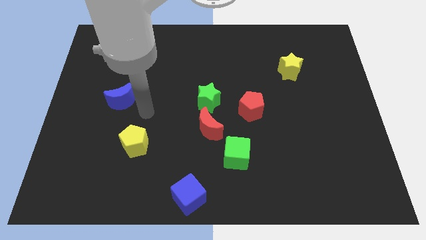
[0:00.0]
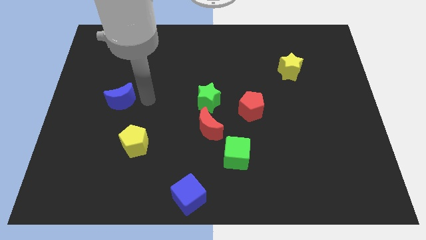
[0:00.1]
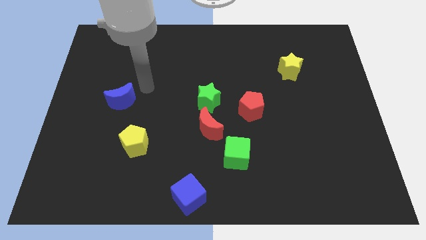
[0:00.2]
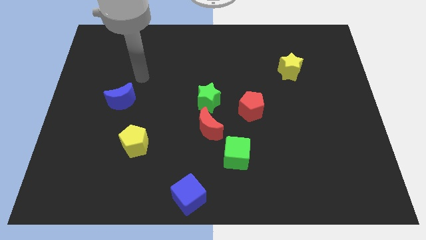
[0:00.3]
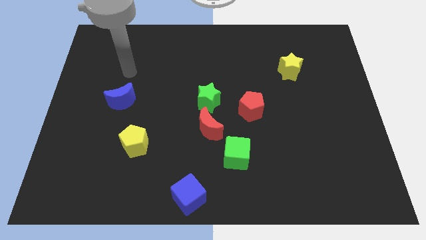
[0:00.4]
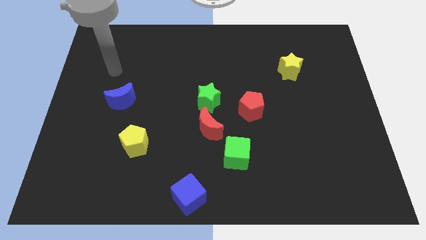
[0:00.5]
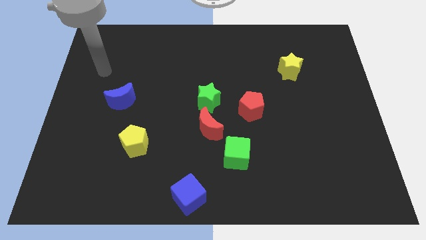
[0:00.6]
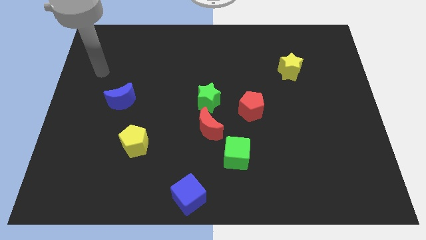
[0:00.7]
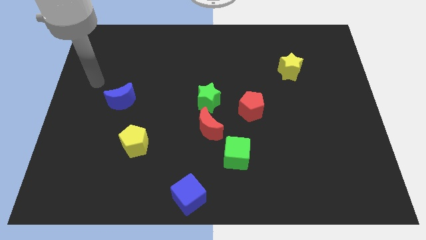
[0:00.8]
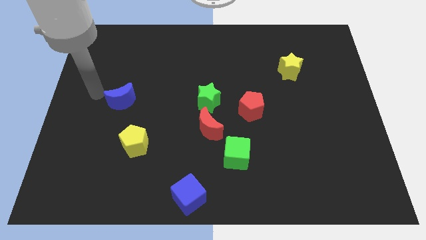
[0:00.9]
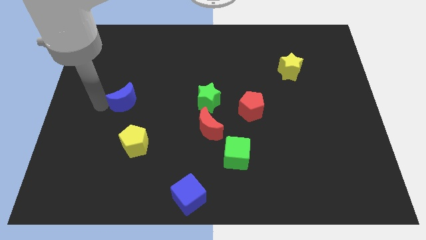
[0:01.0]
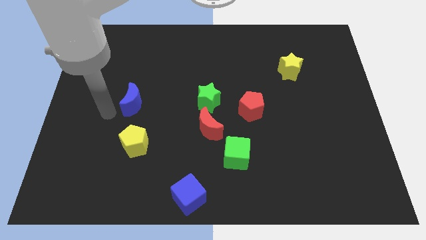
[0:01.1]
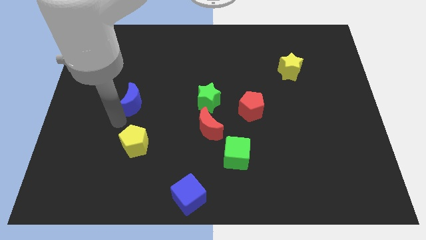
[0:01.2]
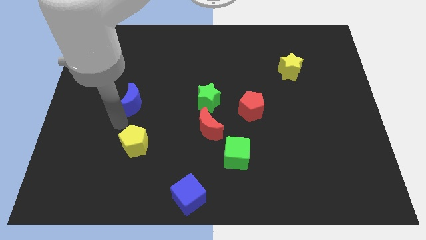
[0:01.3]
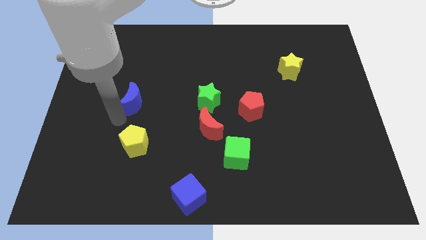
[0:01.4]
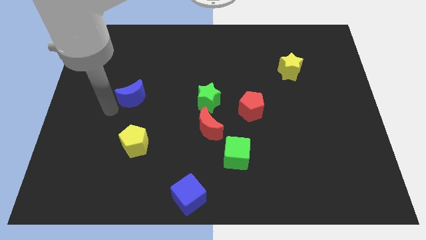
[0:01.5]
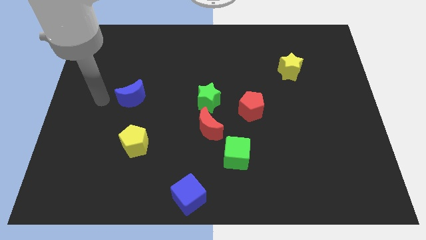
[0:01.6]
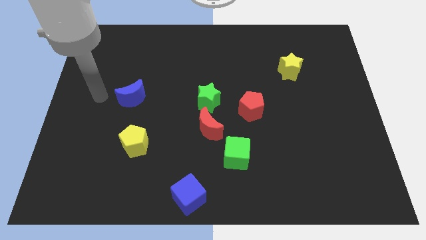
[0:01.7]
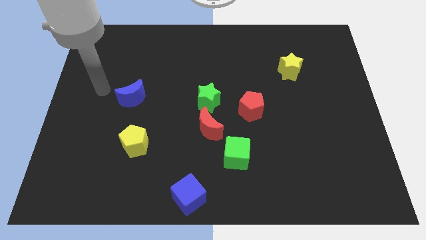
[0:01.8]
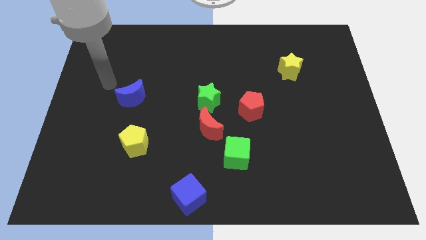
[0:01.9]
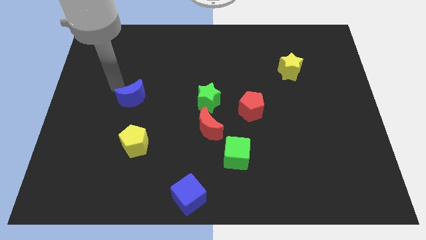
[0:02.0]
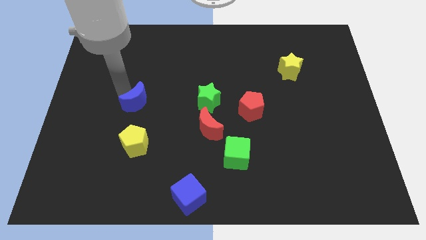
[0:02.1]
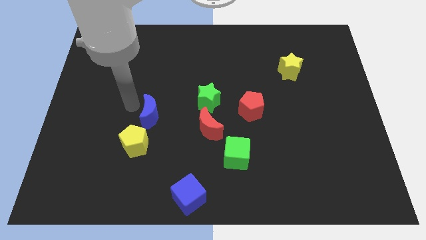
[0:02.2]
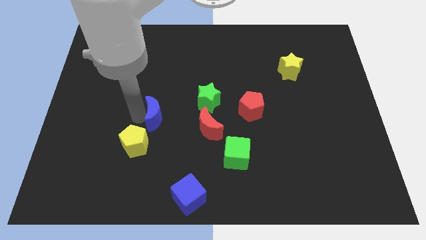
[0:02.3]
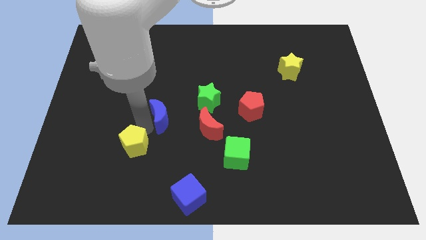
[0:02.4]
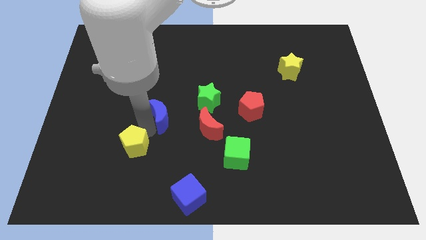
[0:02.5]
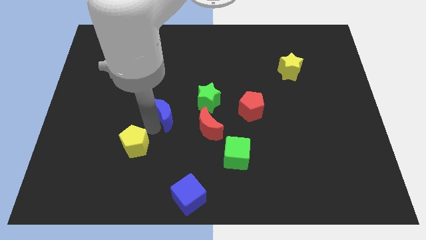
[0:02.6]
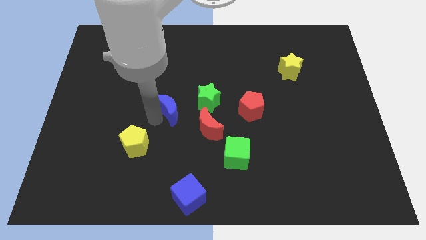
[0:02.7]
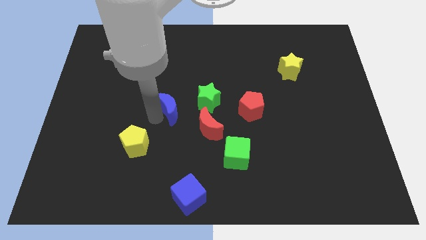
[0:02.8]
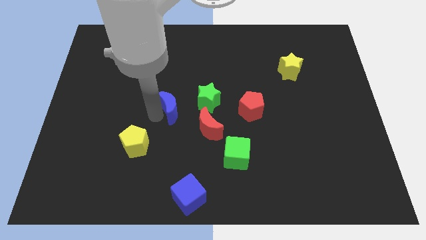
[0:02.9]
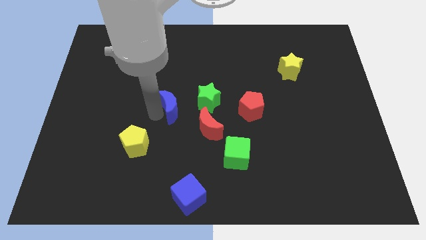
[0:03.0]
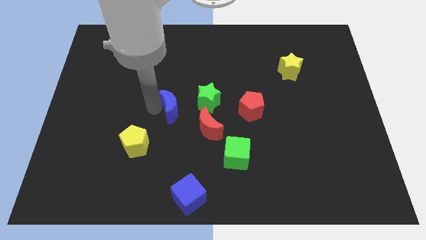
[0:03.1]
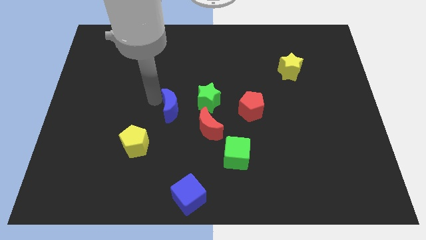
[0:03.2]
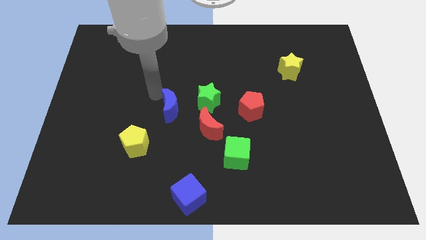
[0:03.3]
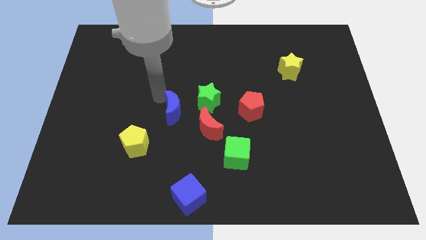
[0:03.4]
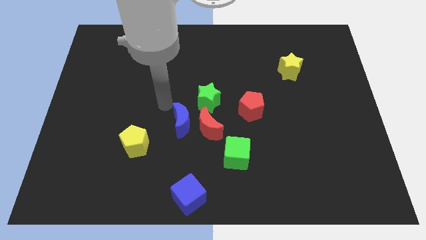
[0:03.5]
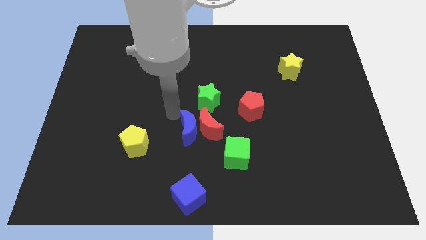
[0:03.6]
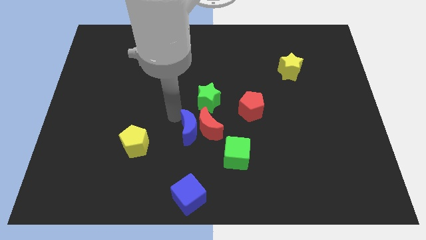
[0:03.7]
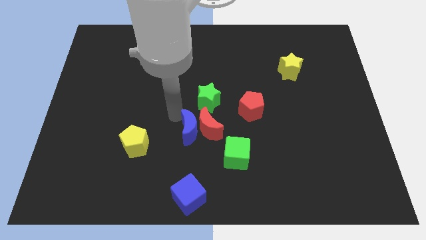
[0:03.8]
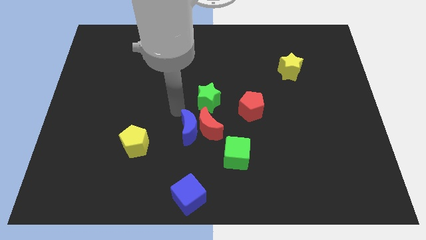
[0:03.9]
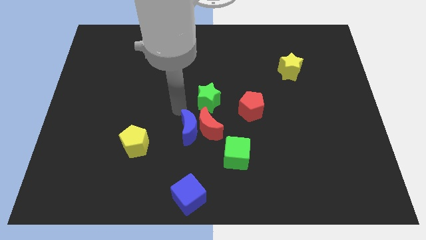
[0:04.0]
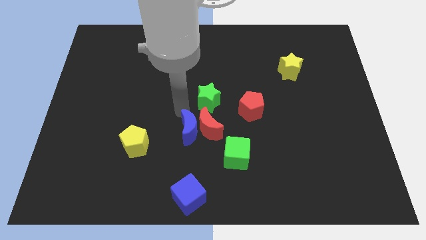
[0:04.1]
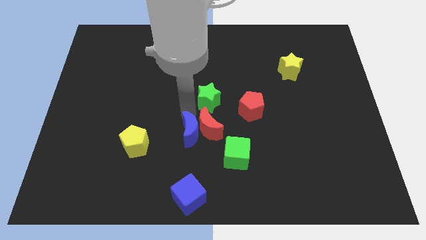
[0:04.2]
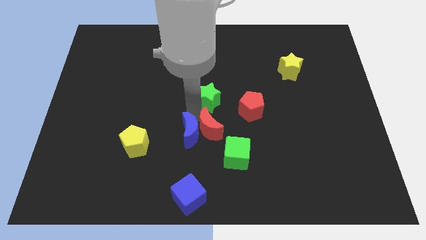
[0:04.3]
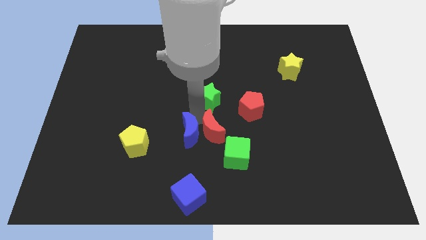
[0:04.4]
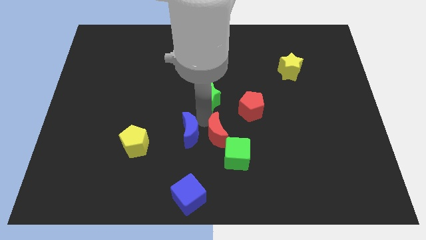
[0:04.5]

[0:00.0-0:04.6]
push the blue crescent to the left of the red crescent

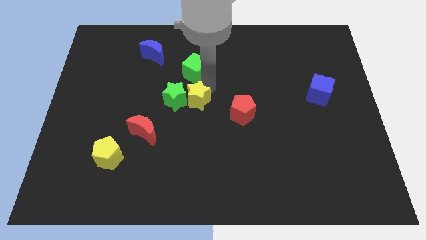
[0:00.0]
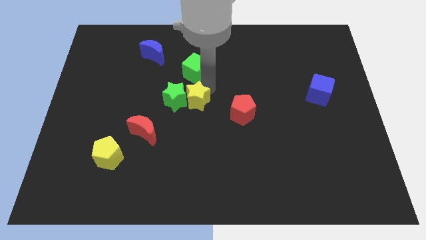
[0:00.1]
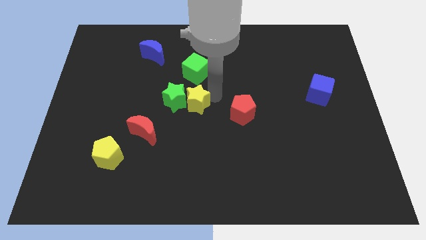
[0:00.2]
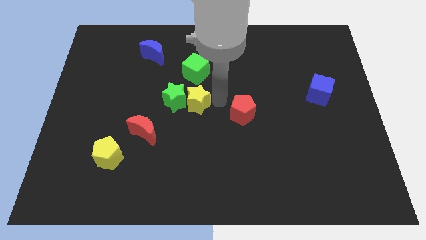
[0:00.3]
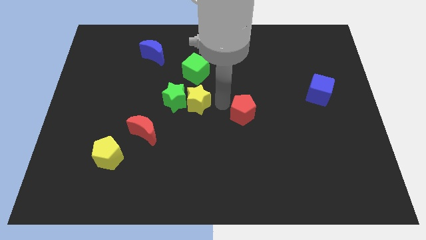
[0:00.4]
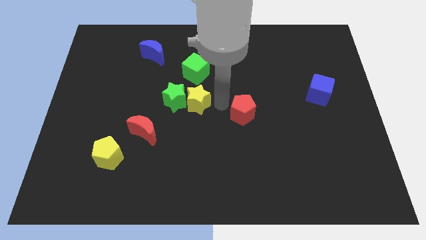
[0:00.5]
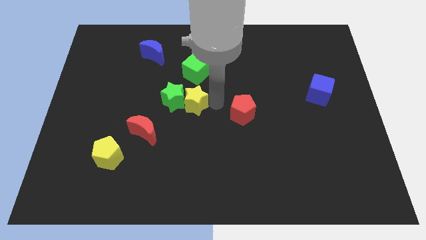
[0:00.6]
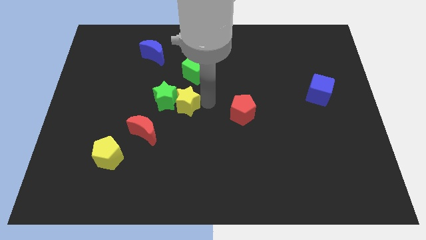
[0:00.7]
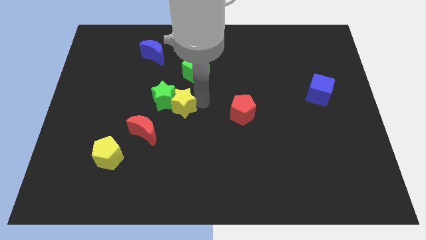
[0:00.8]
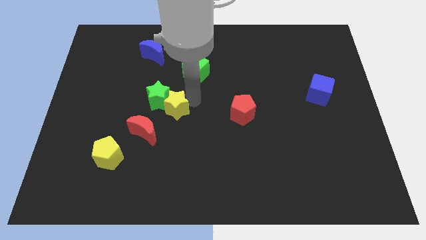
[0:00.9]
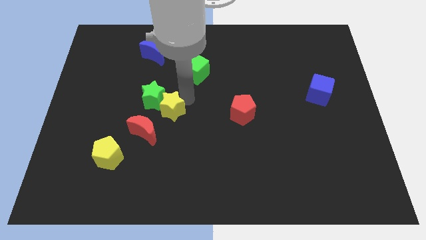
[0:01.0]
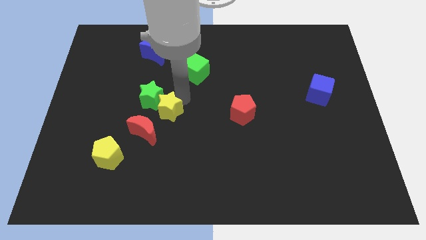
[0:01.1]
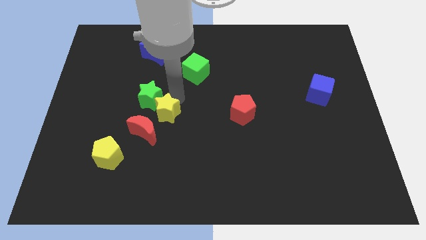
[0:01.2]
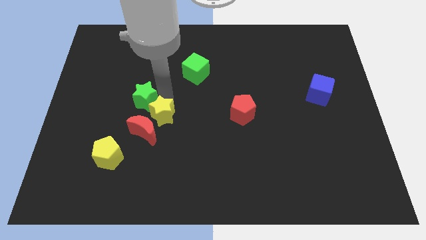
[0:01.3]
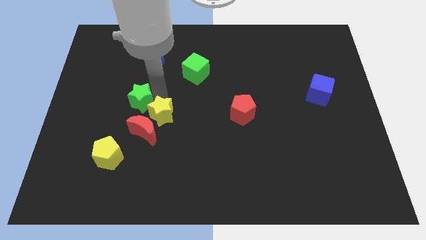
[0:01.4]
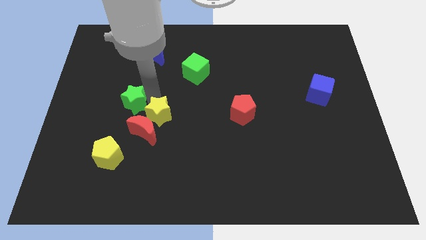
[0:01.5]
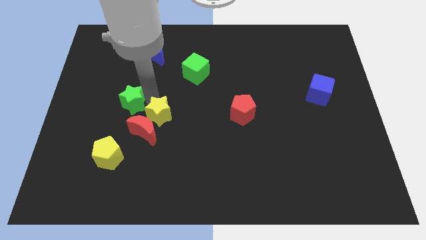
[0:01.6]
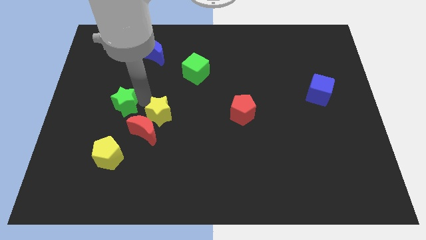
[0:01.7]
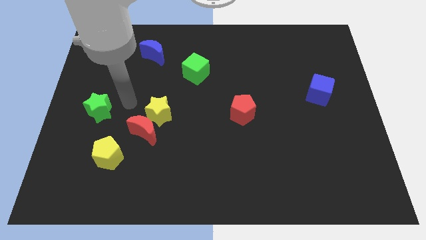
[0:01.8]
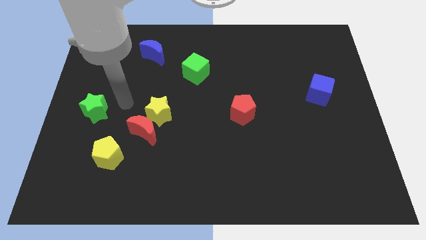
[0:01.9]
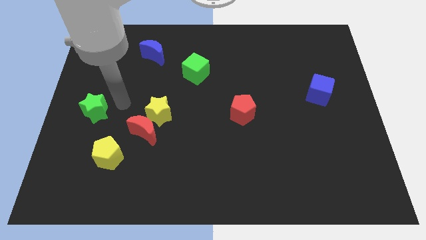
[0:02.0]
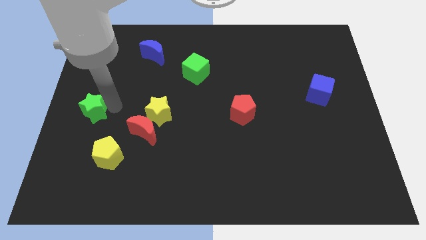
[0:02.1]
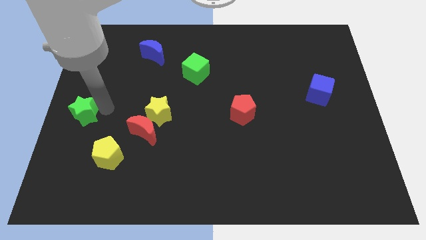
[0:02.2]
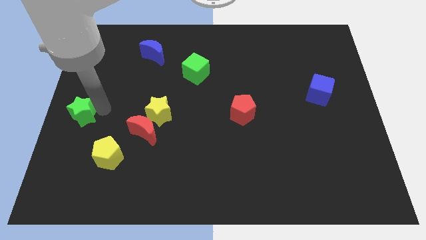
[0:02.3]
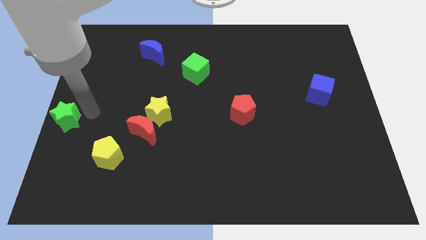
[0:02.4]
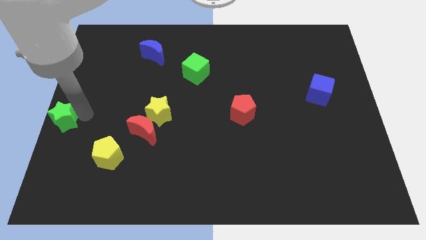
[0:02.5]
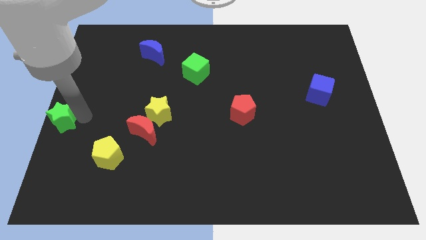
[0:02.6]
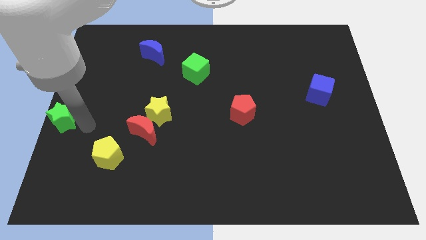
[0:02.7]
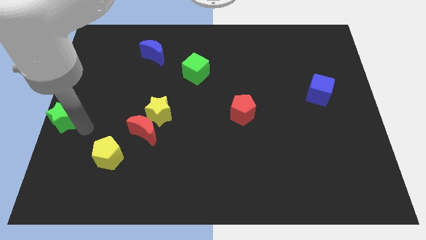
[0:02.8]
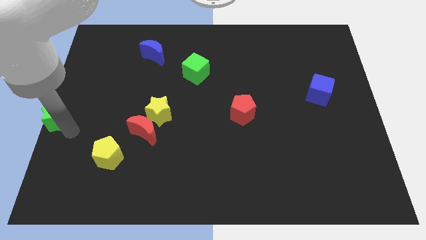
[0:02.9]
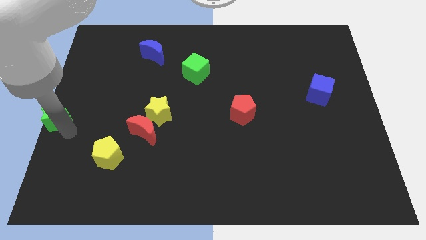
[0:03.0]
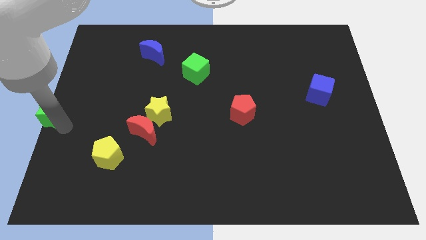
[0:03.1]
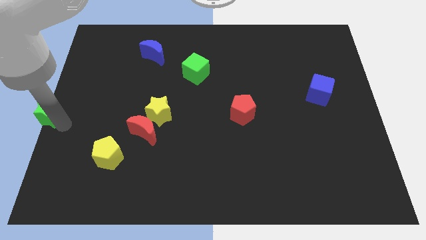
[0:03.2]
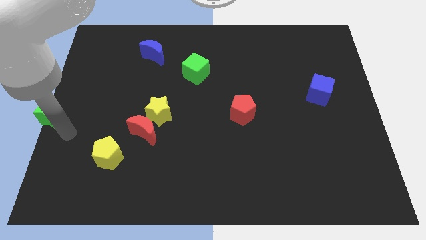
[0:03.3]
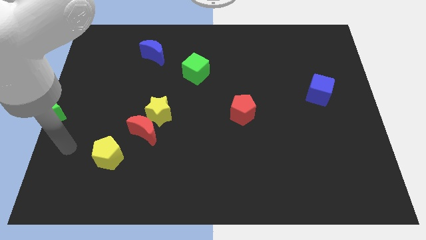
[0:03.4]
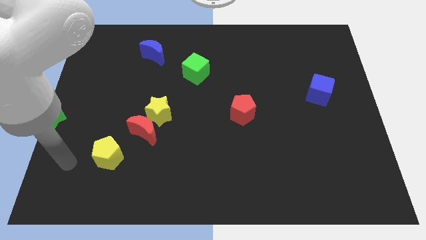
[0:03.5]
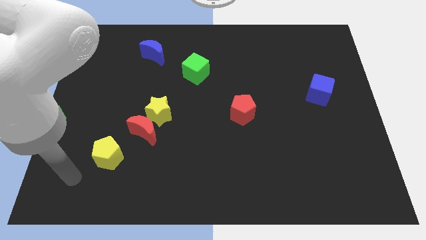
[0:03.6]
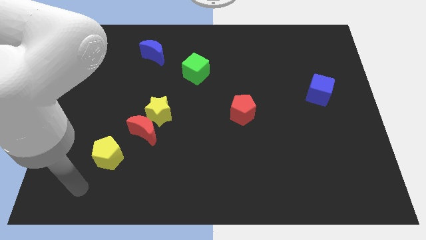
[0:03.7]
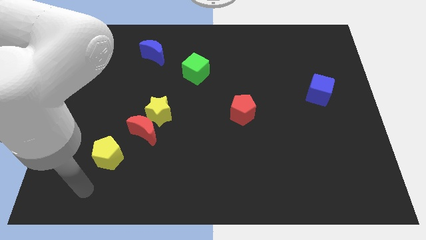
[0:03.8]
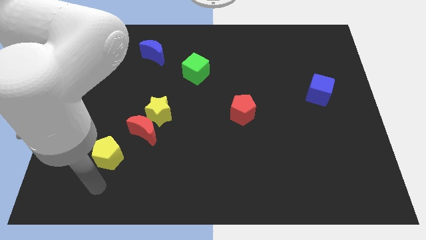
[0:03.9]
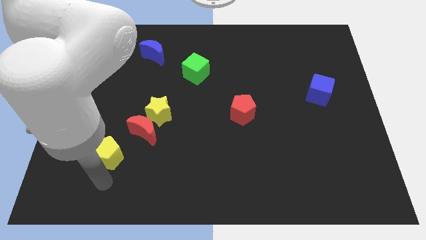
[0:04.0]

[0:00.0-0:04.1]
separate the yellow and green stars

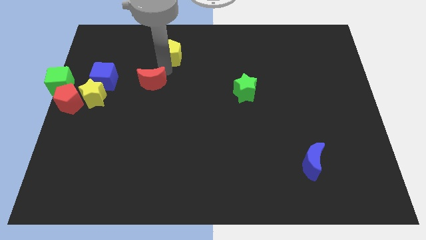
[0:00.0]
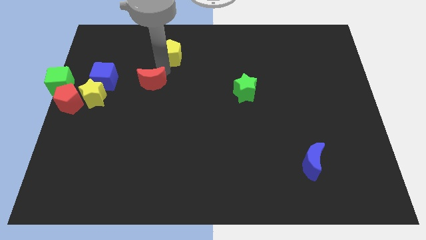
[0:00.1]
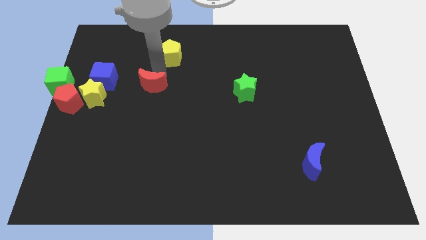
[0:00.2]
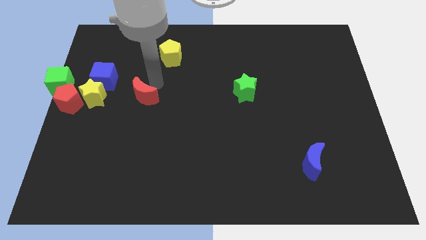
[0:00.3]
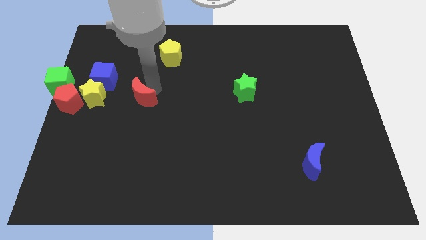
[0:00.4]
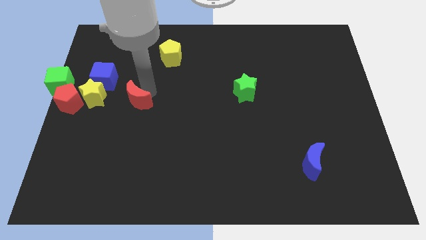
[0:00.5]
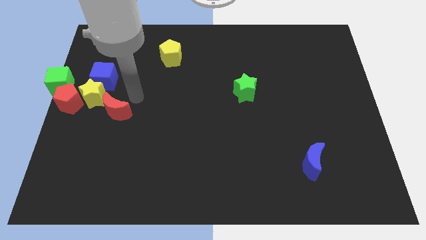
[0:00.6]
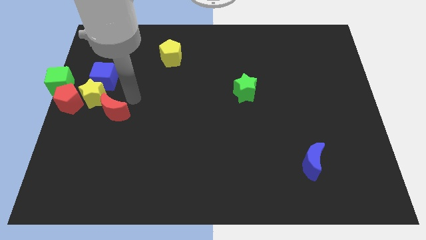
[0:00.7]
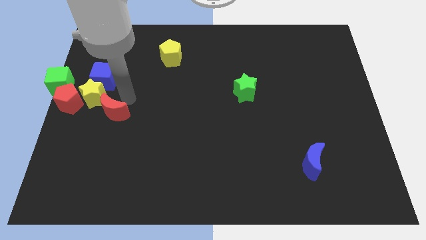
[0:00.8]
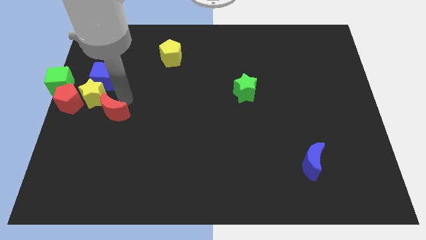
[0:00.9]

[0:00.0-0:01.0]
place red moon to the bottom right of yellow star
